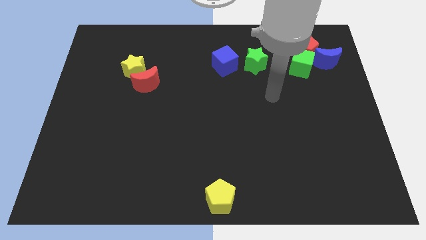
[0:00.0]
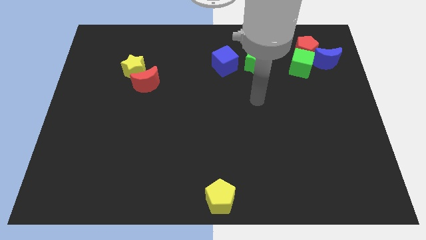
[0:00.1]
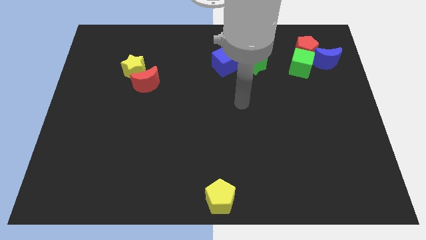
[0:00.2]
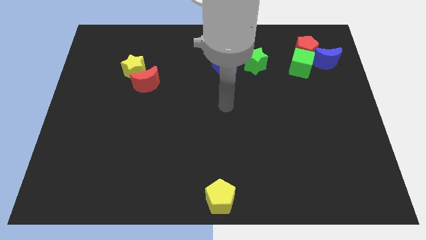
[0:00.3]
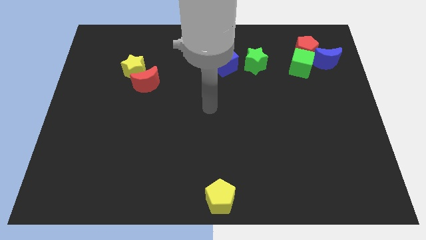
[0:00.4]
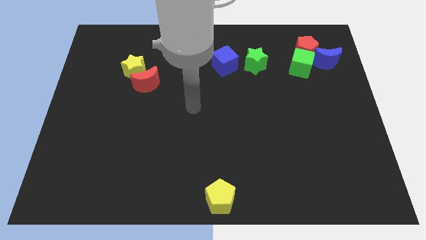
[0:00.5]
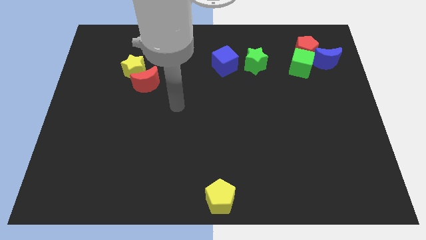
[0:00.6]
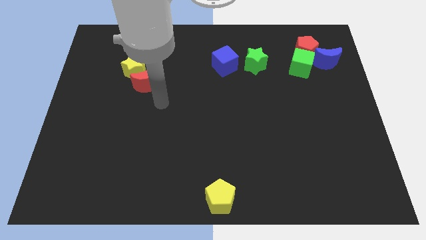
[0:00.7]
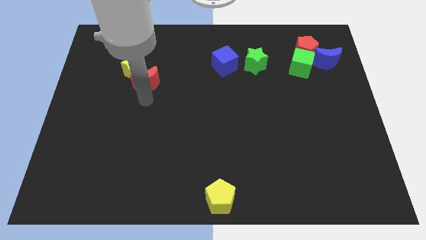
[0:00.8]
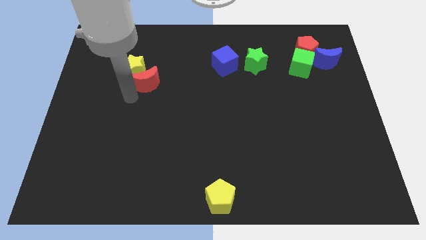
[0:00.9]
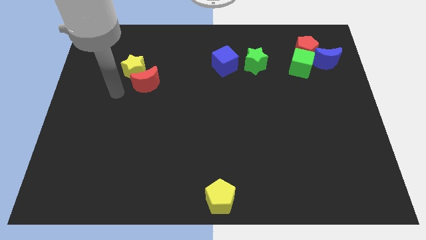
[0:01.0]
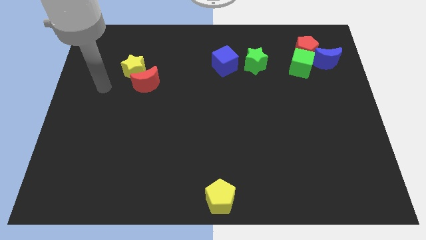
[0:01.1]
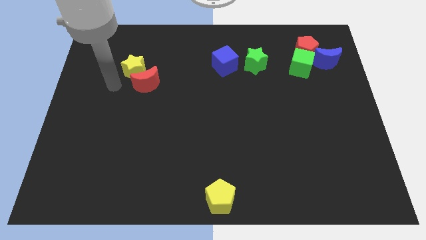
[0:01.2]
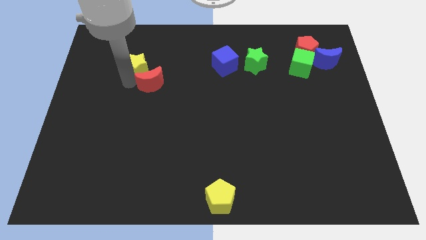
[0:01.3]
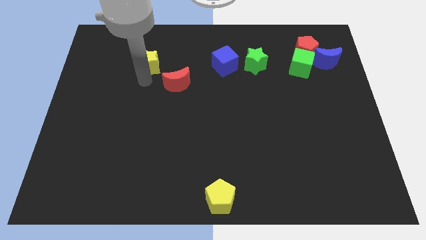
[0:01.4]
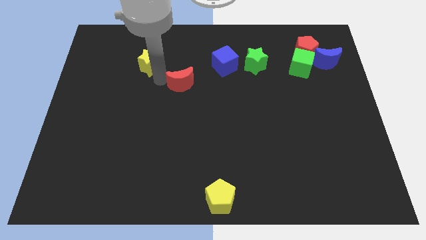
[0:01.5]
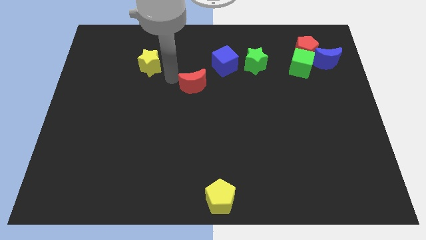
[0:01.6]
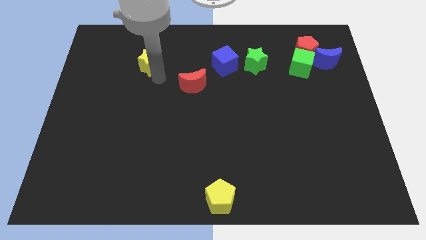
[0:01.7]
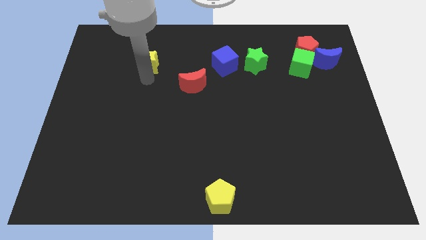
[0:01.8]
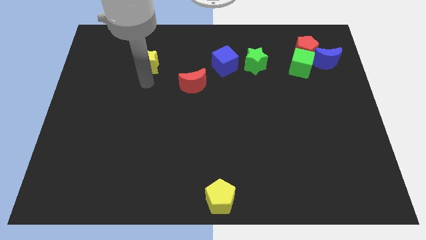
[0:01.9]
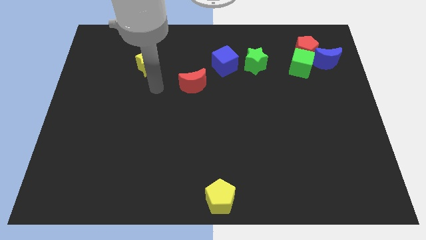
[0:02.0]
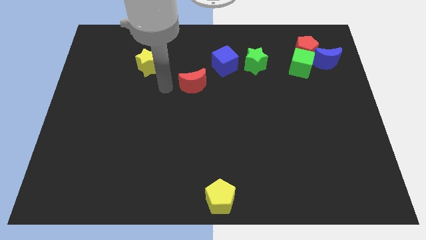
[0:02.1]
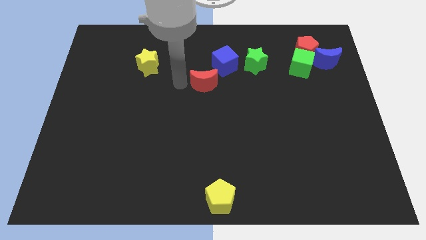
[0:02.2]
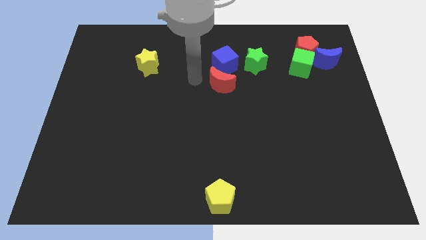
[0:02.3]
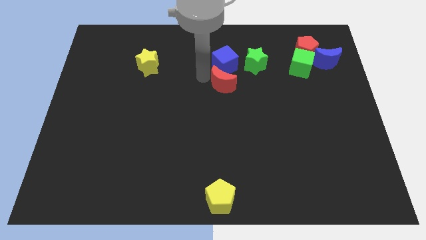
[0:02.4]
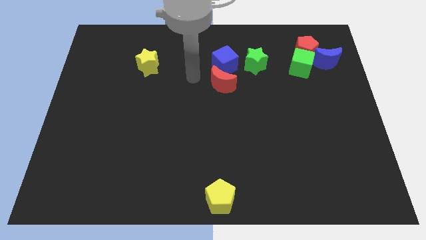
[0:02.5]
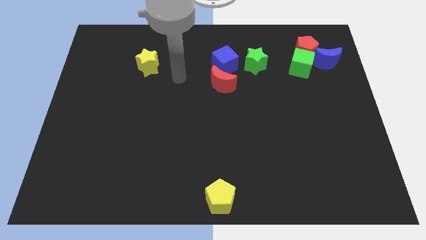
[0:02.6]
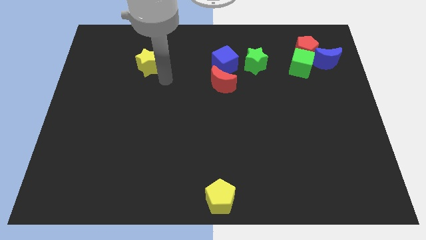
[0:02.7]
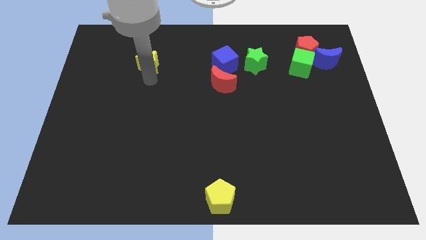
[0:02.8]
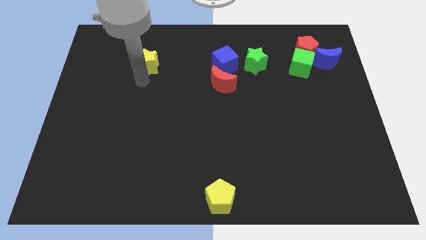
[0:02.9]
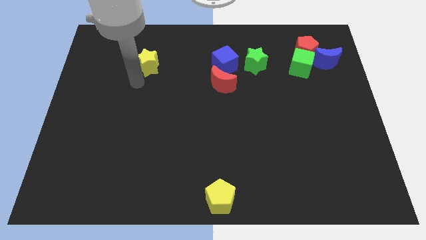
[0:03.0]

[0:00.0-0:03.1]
separate the red moon from the yellow star

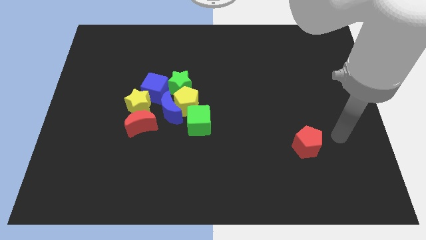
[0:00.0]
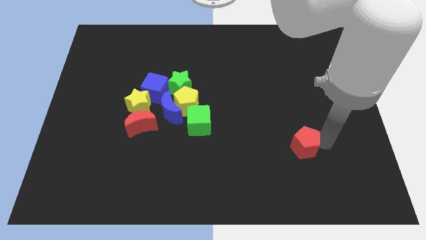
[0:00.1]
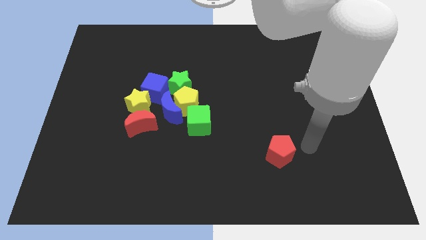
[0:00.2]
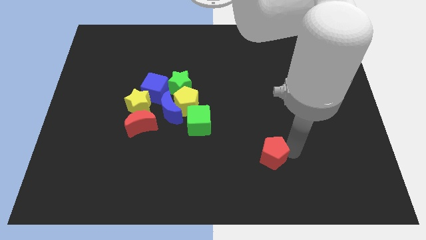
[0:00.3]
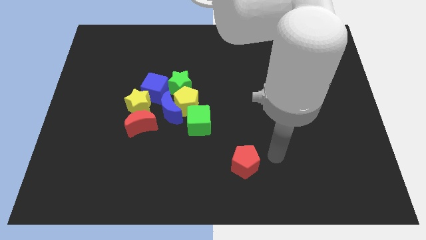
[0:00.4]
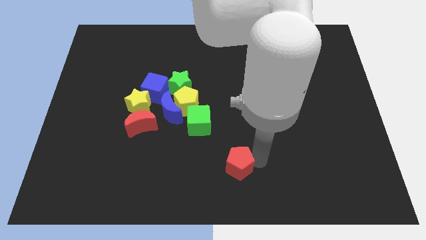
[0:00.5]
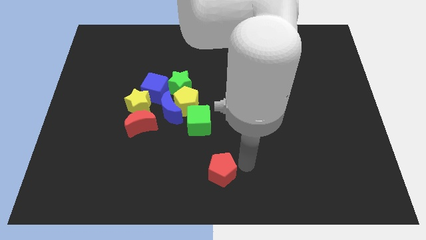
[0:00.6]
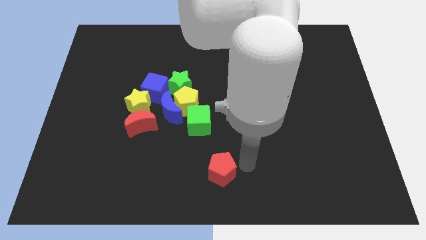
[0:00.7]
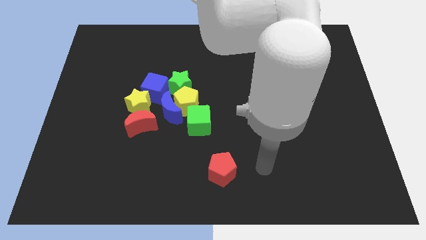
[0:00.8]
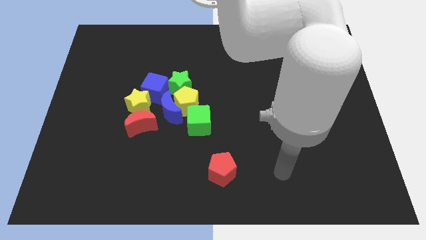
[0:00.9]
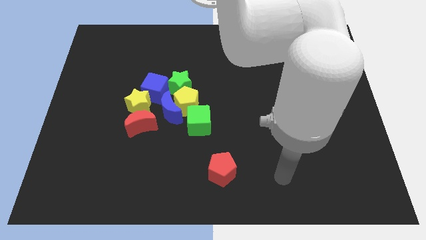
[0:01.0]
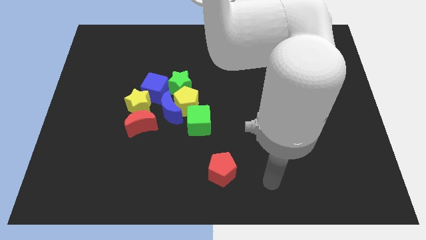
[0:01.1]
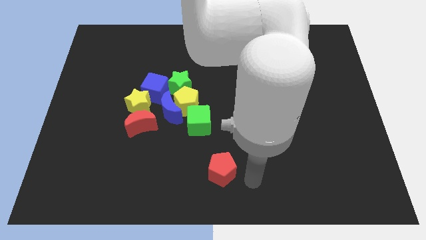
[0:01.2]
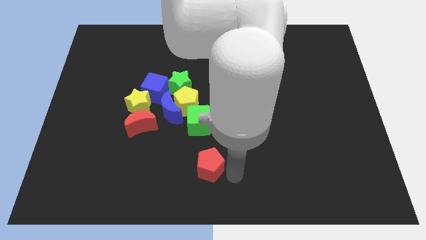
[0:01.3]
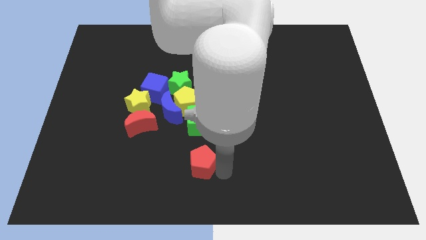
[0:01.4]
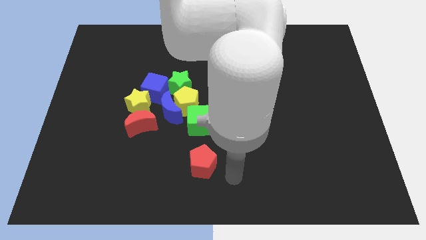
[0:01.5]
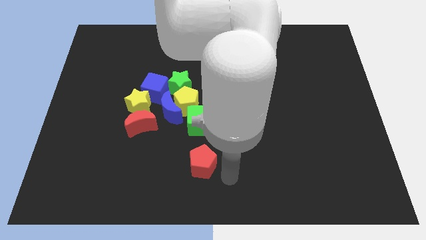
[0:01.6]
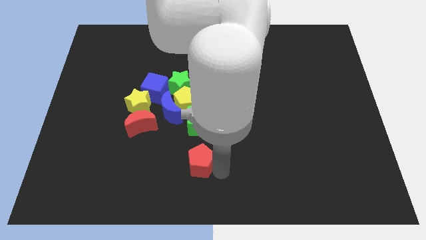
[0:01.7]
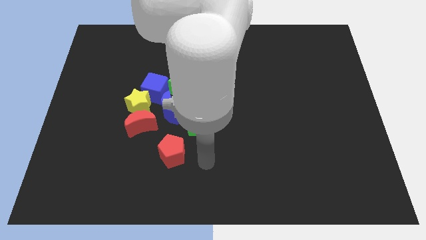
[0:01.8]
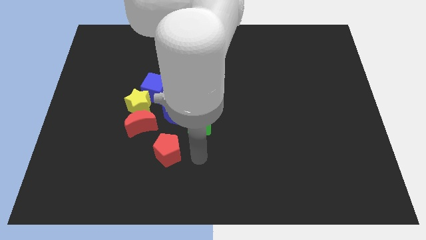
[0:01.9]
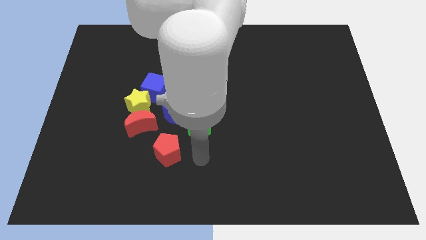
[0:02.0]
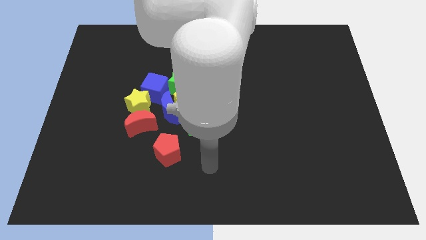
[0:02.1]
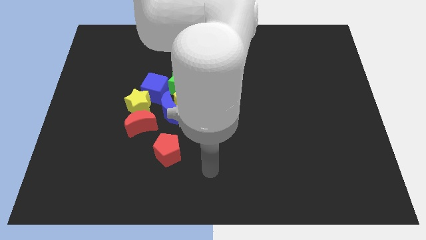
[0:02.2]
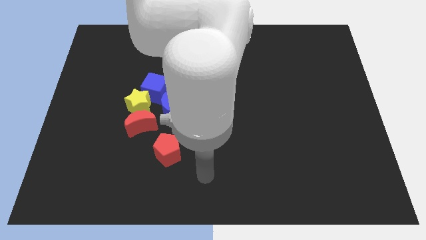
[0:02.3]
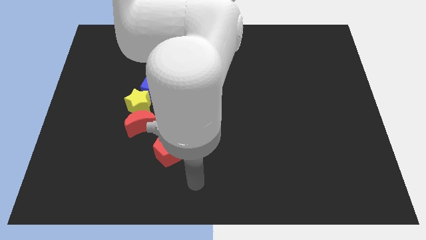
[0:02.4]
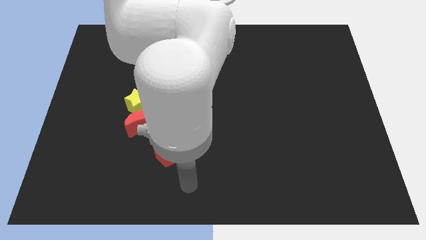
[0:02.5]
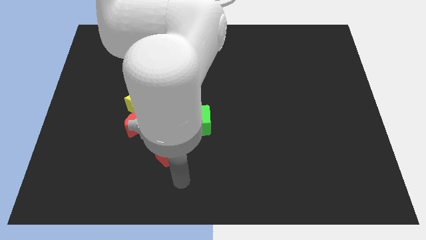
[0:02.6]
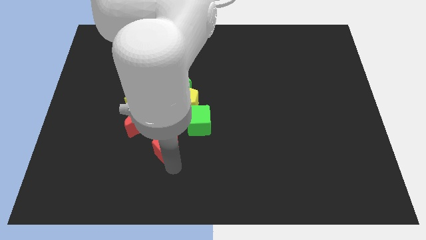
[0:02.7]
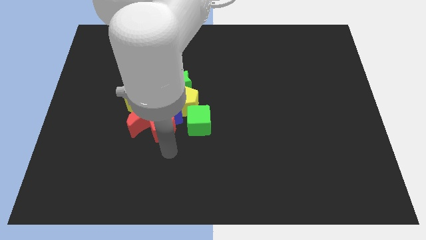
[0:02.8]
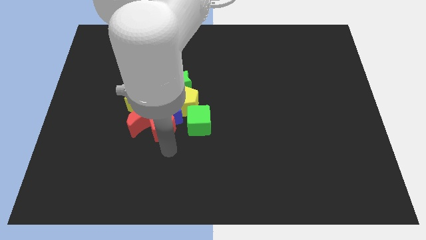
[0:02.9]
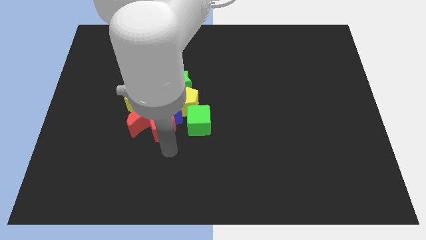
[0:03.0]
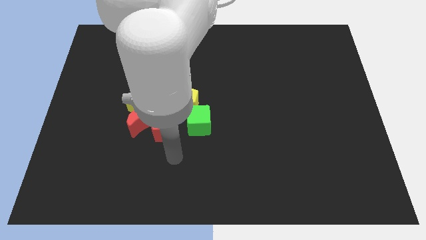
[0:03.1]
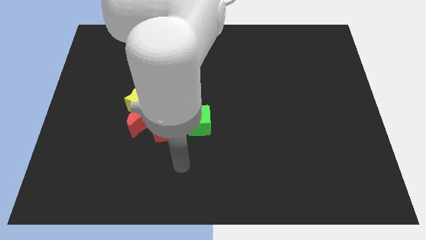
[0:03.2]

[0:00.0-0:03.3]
move the red pentagon in between red crescent and green cube

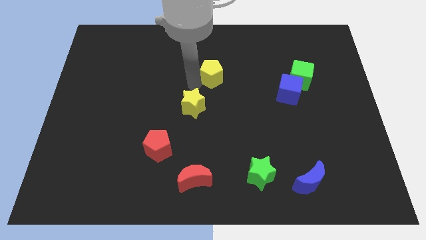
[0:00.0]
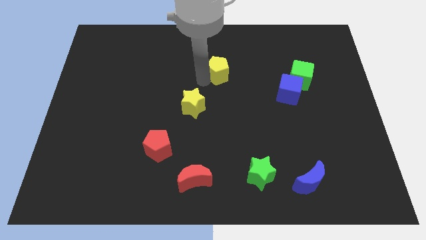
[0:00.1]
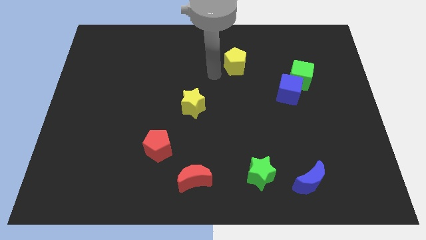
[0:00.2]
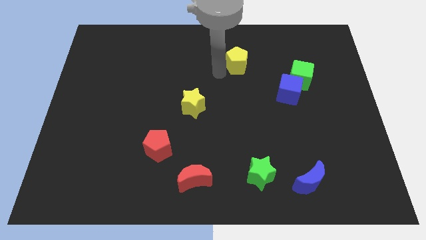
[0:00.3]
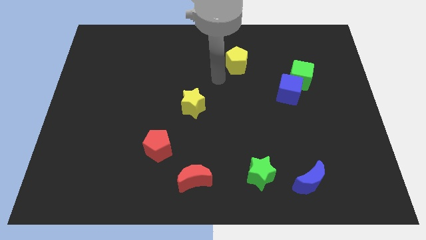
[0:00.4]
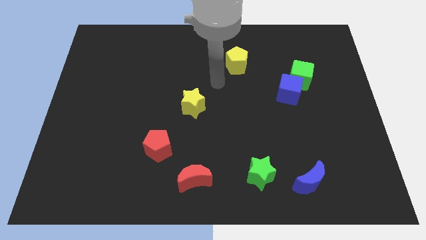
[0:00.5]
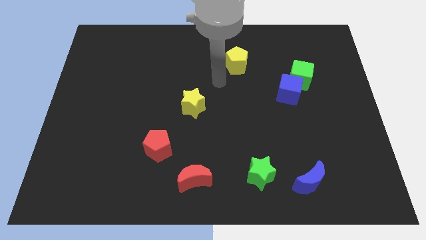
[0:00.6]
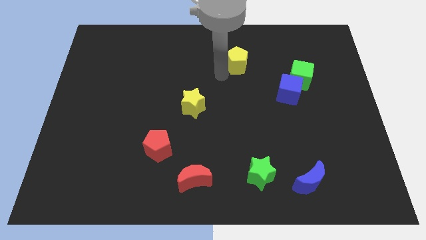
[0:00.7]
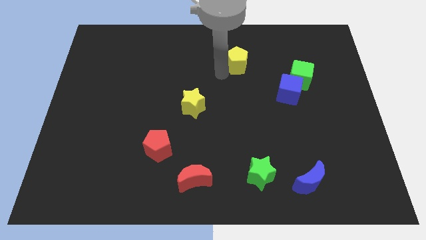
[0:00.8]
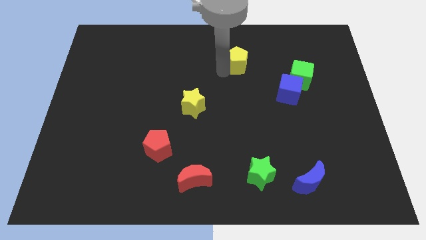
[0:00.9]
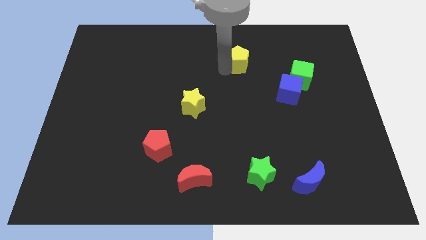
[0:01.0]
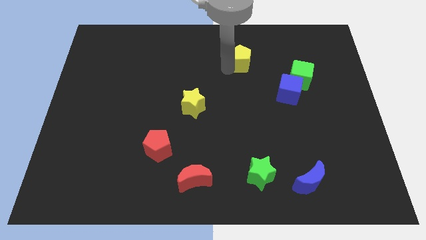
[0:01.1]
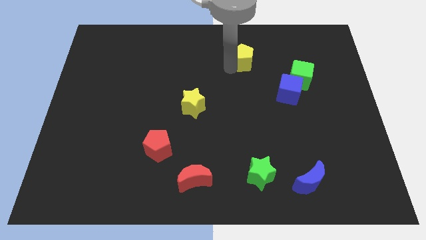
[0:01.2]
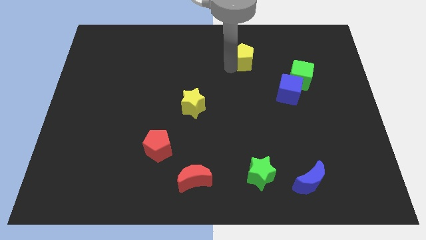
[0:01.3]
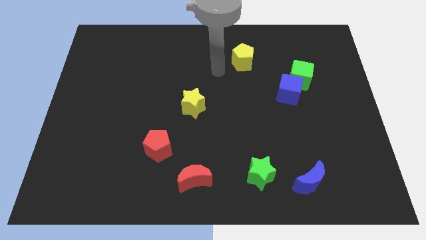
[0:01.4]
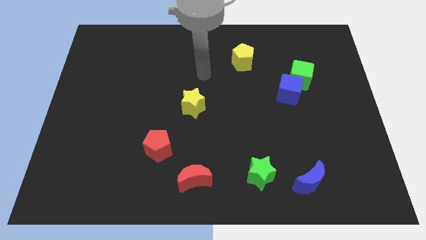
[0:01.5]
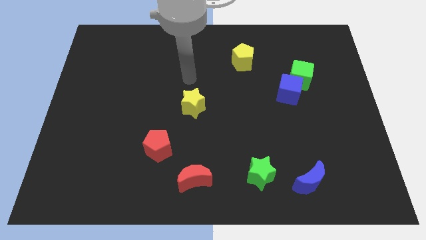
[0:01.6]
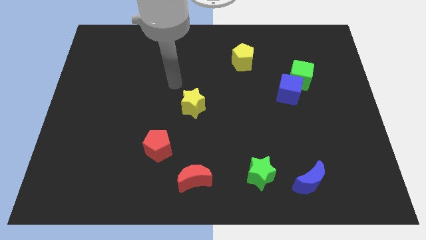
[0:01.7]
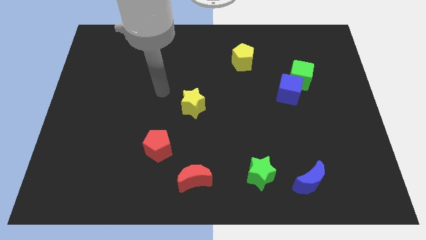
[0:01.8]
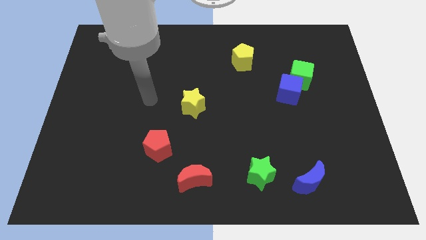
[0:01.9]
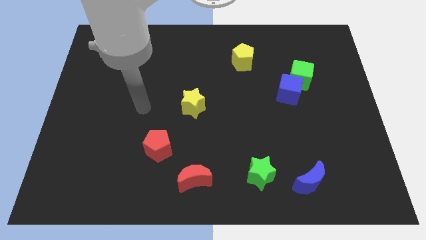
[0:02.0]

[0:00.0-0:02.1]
push yellow pentagon towards top center

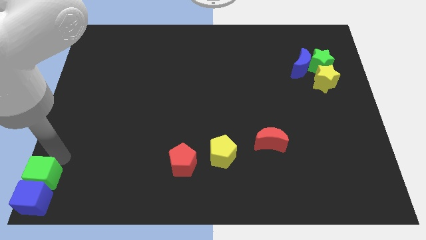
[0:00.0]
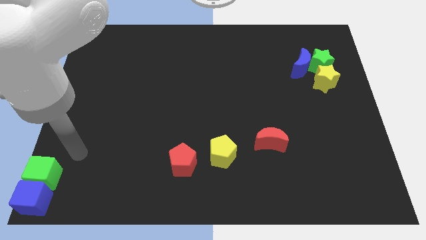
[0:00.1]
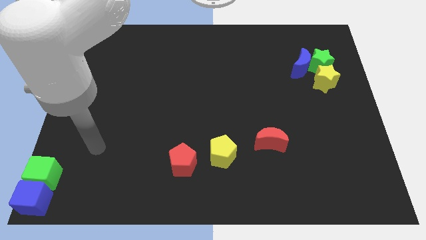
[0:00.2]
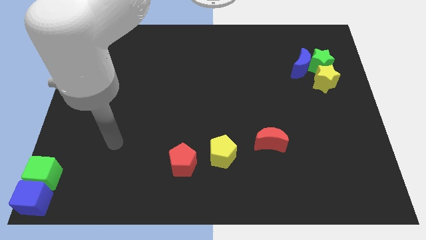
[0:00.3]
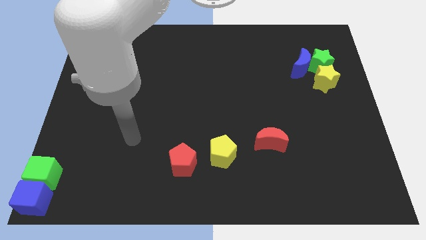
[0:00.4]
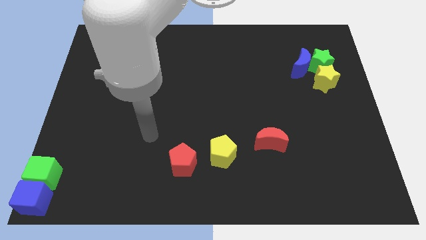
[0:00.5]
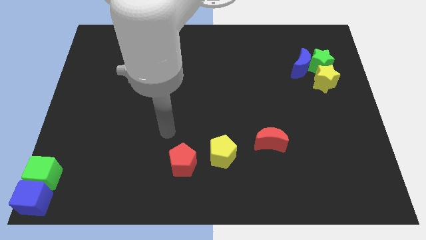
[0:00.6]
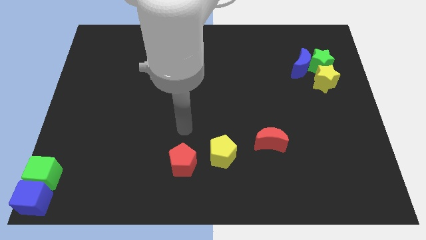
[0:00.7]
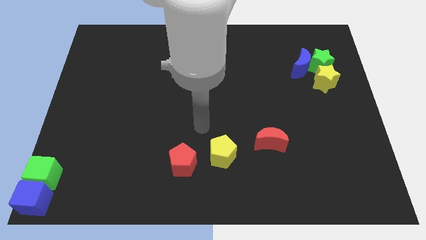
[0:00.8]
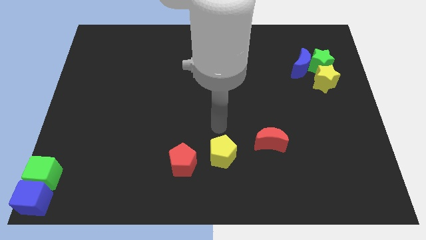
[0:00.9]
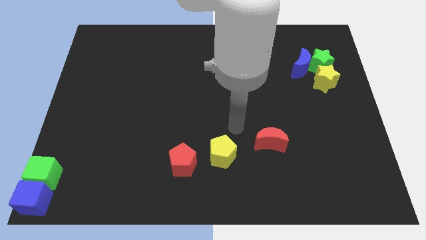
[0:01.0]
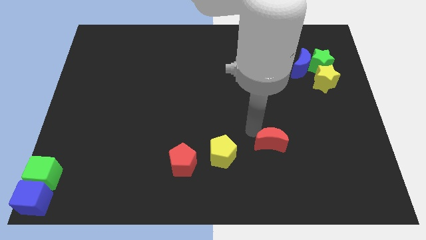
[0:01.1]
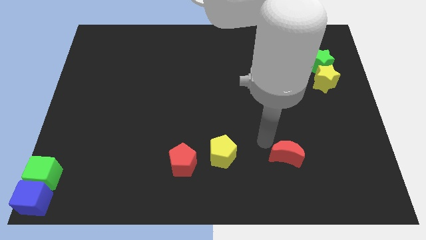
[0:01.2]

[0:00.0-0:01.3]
place your arm to the top of the red moon
